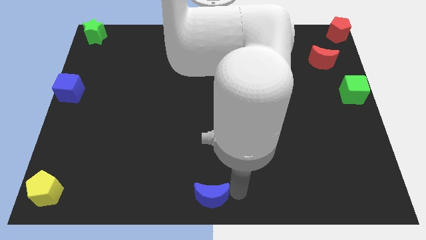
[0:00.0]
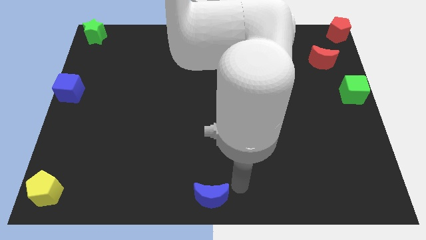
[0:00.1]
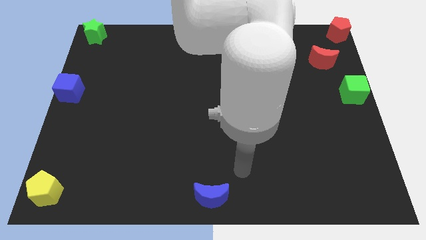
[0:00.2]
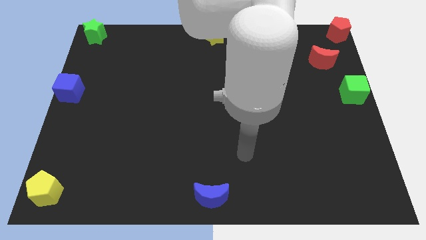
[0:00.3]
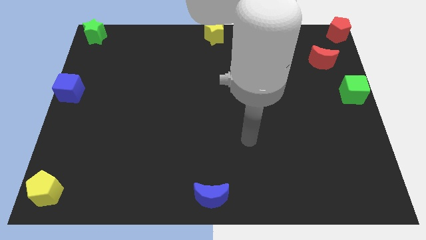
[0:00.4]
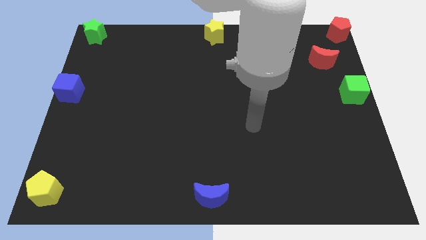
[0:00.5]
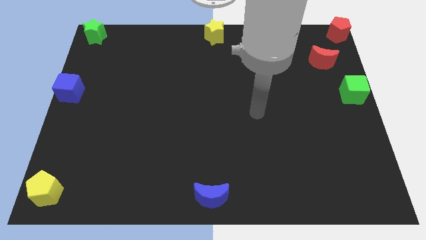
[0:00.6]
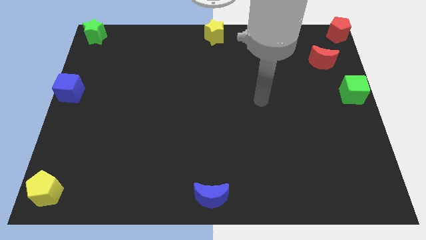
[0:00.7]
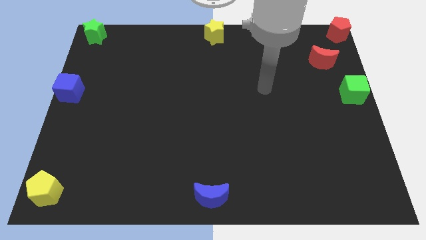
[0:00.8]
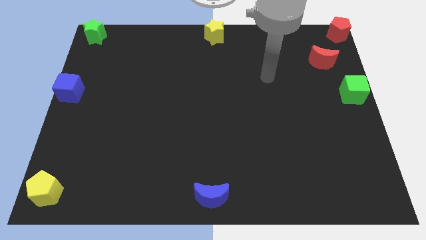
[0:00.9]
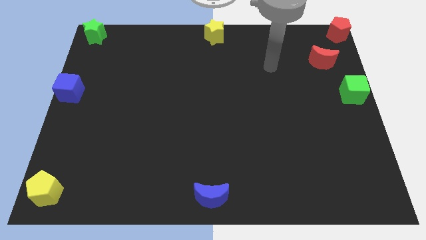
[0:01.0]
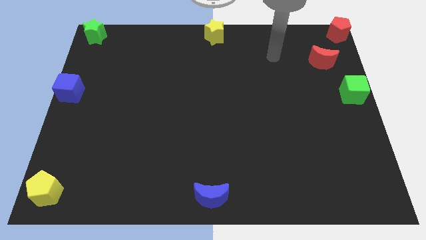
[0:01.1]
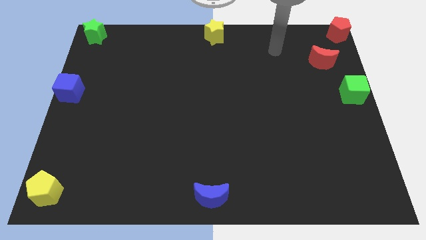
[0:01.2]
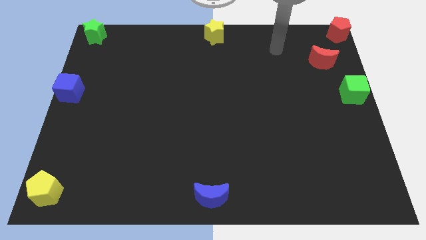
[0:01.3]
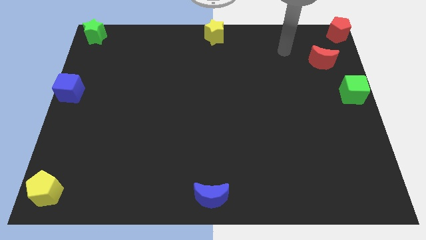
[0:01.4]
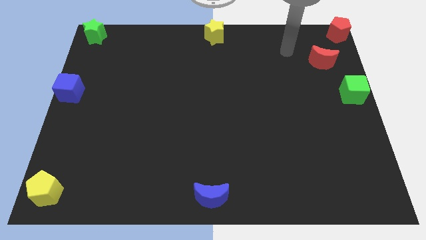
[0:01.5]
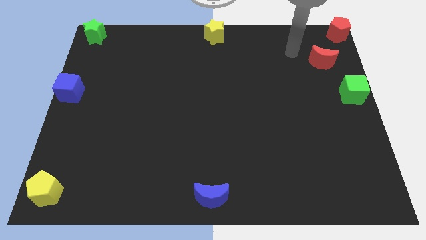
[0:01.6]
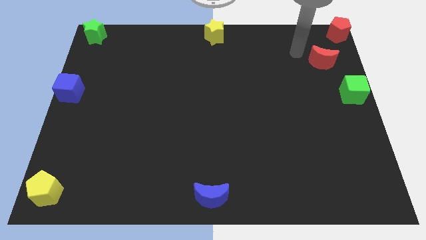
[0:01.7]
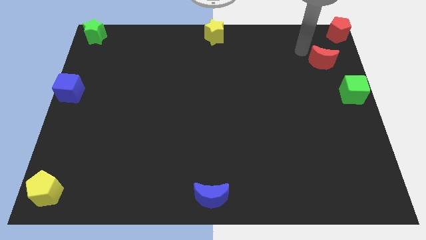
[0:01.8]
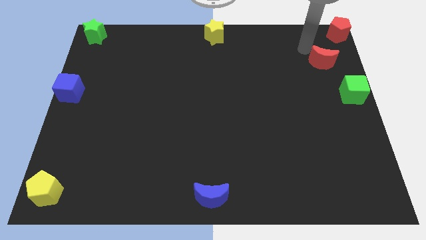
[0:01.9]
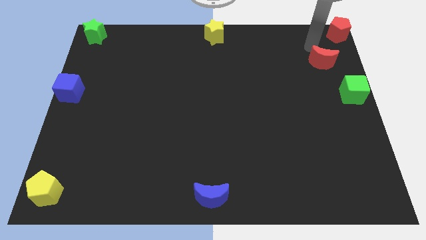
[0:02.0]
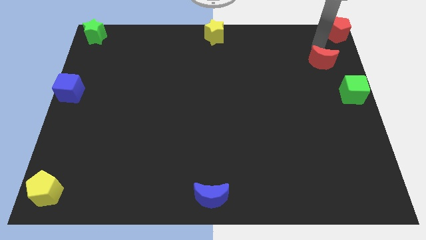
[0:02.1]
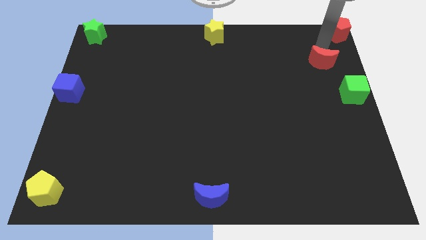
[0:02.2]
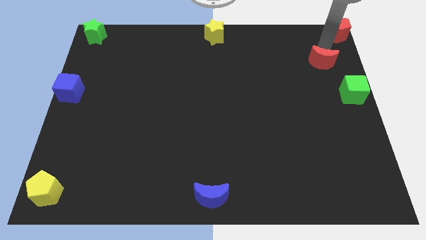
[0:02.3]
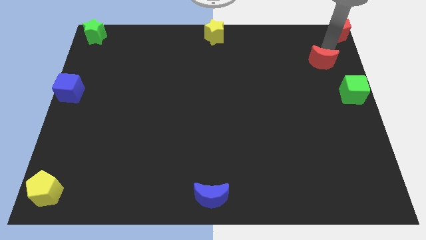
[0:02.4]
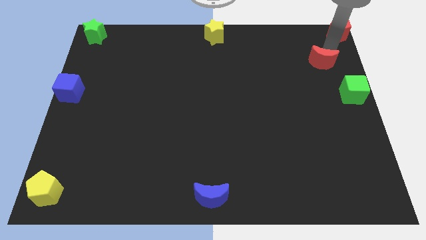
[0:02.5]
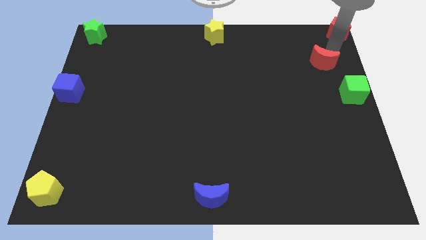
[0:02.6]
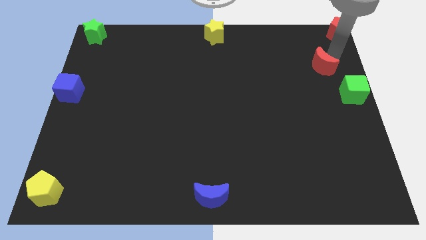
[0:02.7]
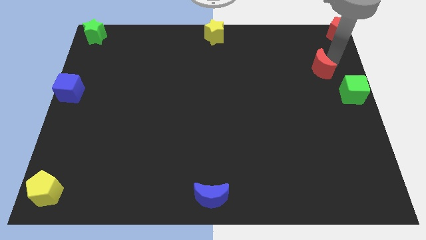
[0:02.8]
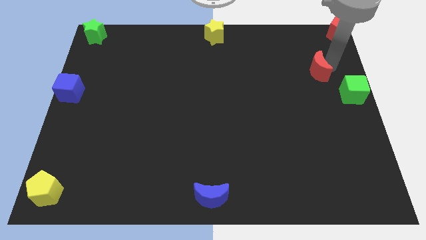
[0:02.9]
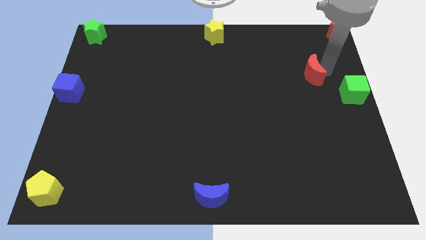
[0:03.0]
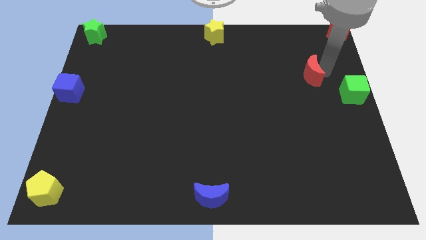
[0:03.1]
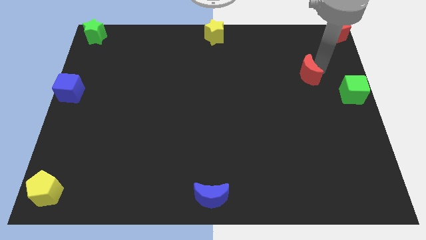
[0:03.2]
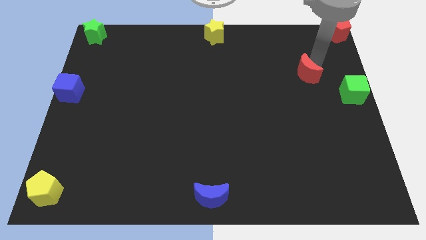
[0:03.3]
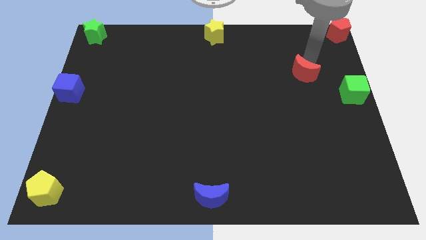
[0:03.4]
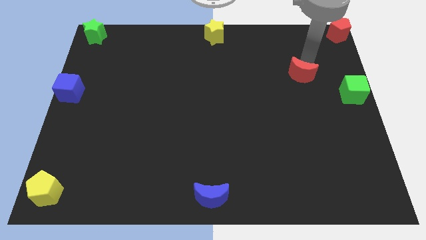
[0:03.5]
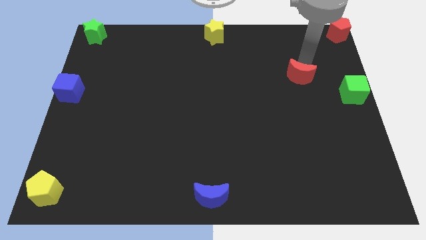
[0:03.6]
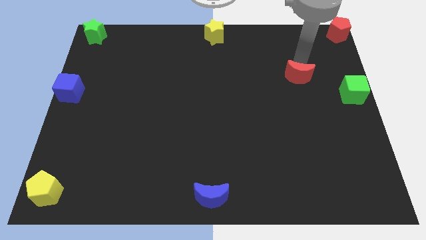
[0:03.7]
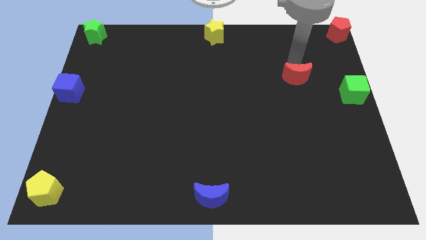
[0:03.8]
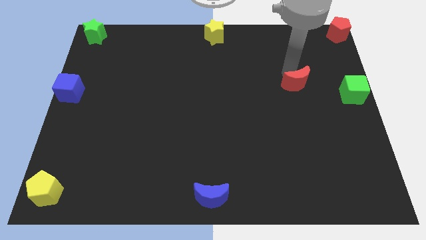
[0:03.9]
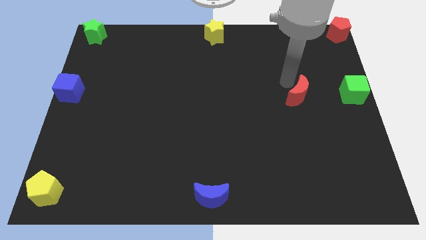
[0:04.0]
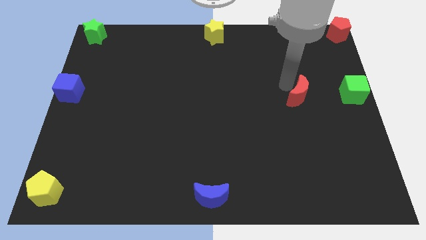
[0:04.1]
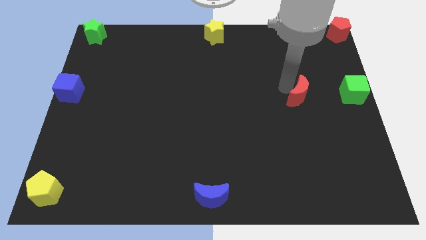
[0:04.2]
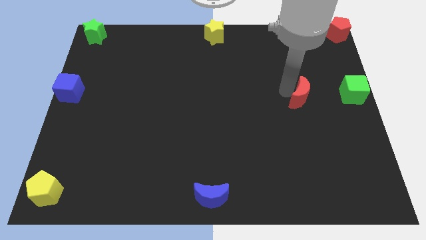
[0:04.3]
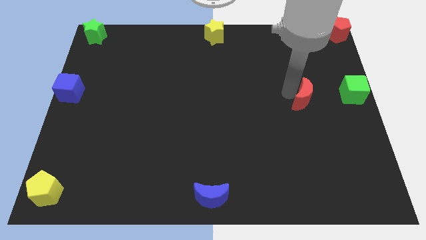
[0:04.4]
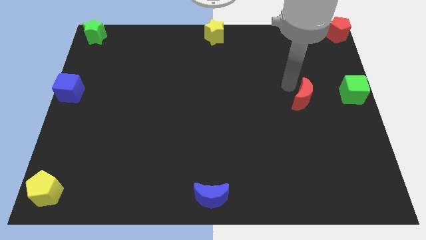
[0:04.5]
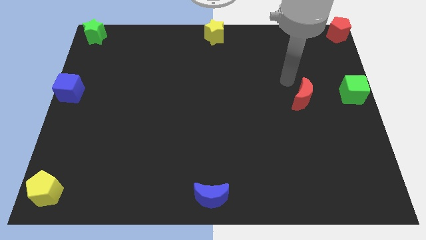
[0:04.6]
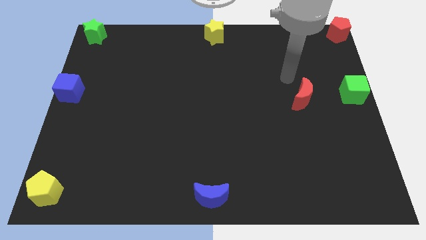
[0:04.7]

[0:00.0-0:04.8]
move the red moon horizontally to the left side of the green cube

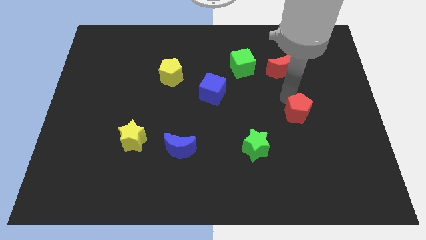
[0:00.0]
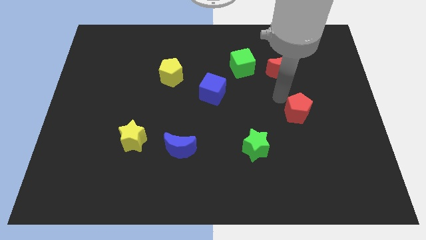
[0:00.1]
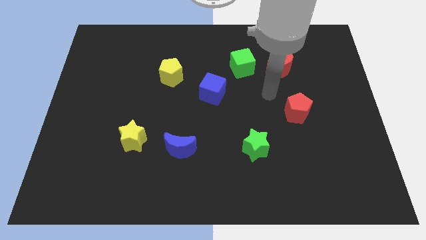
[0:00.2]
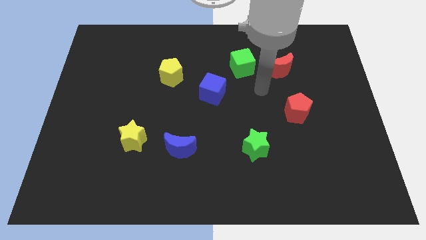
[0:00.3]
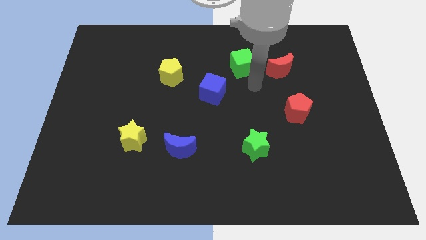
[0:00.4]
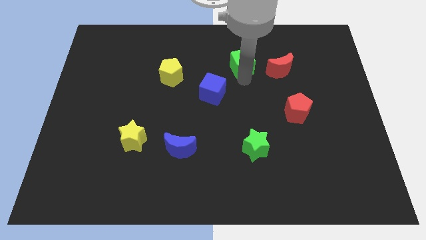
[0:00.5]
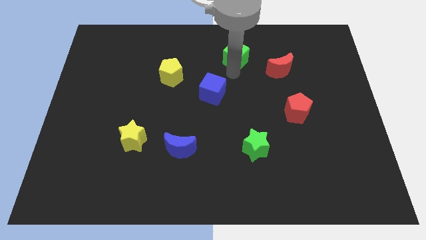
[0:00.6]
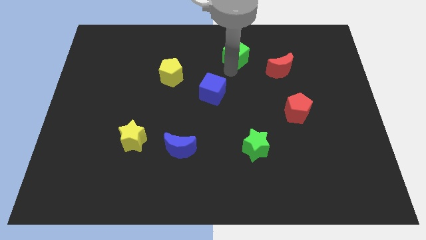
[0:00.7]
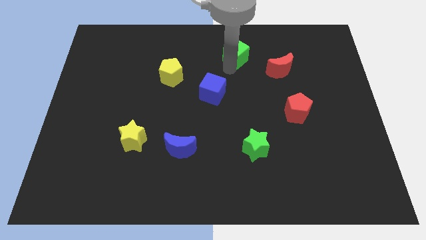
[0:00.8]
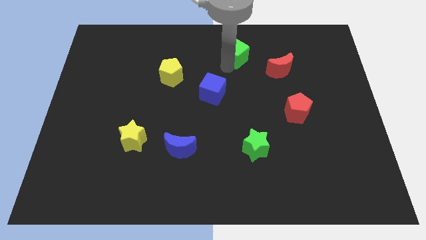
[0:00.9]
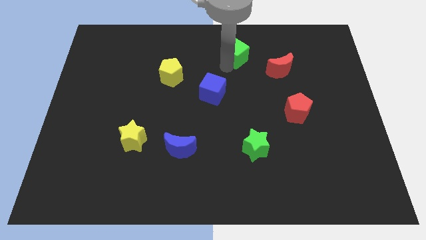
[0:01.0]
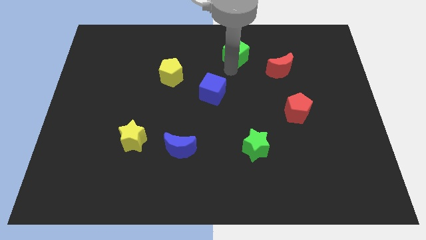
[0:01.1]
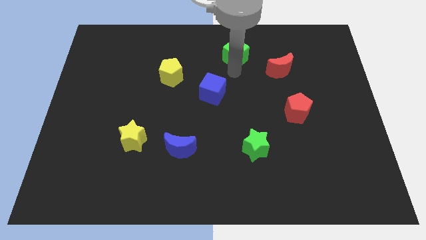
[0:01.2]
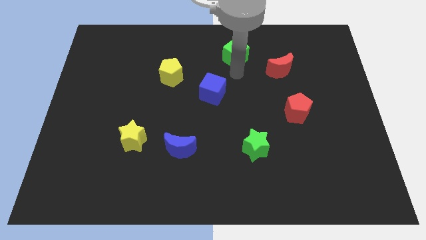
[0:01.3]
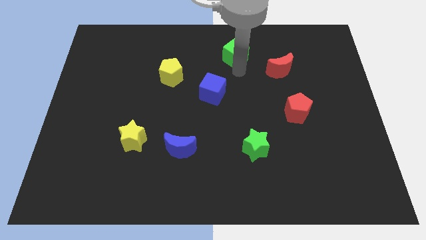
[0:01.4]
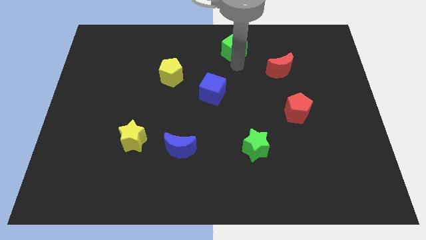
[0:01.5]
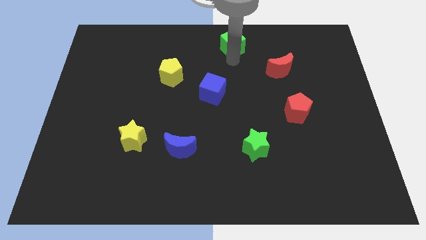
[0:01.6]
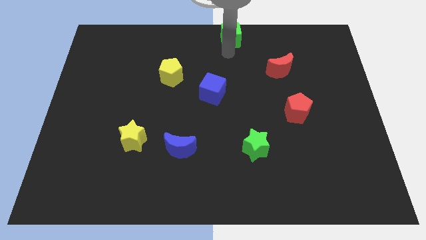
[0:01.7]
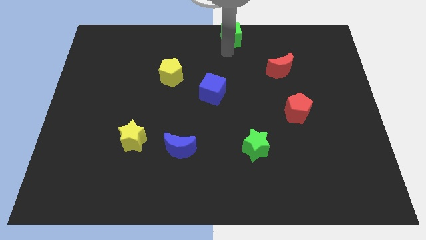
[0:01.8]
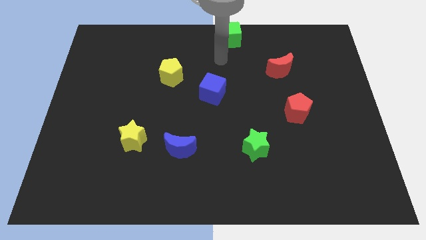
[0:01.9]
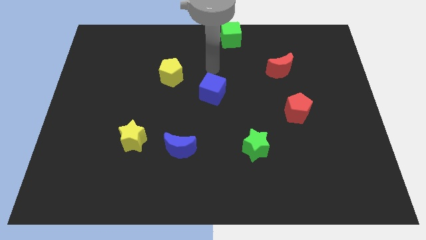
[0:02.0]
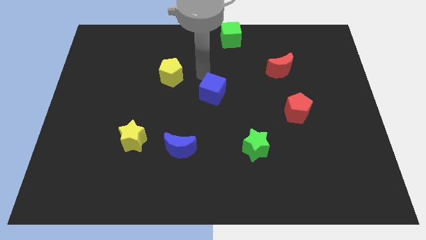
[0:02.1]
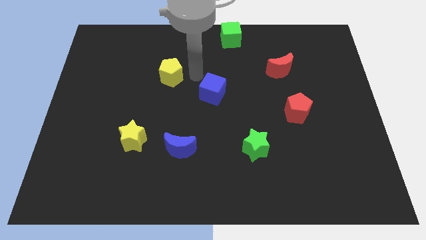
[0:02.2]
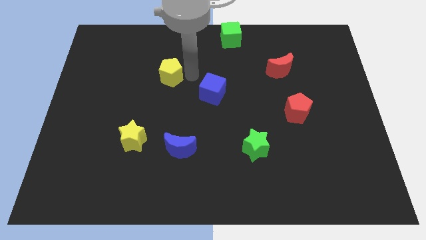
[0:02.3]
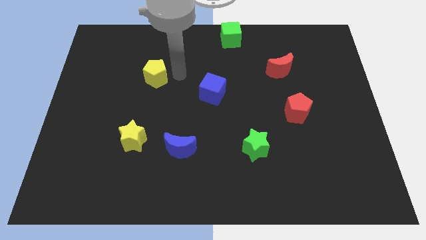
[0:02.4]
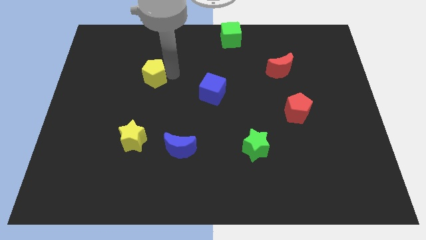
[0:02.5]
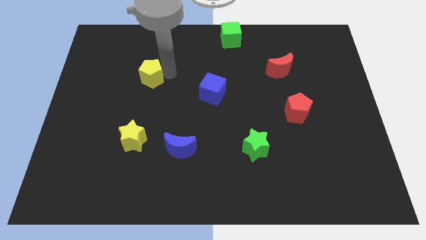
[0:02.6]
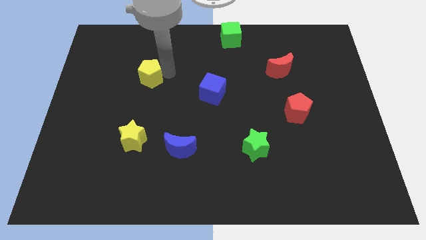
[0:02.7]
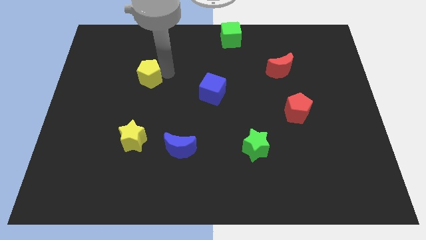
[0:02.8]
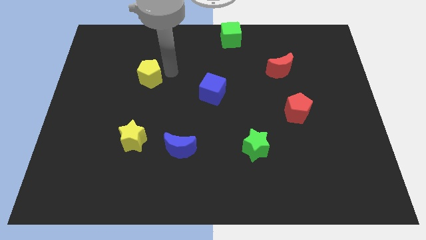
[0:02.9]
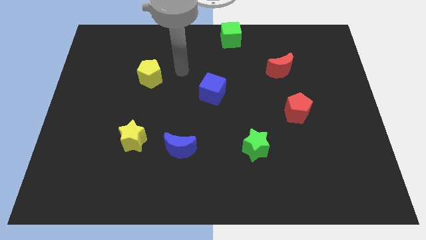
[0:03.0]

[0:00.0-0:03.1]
push green cube to the top center of the board

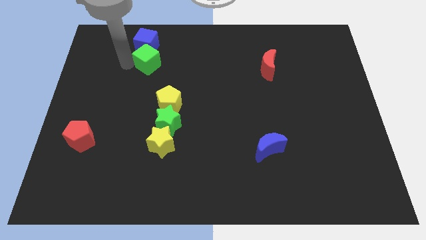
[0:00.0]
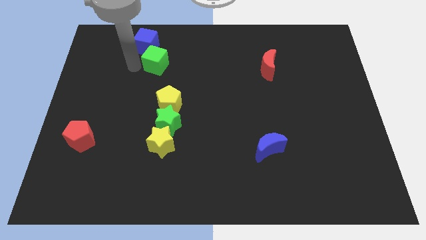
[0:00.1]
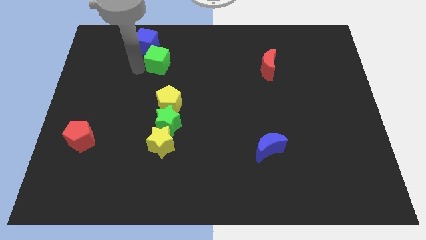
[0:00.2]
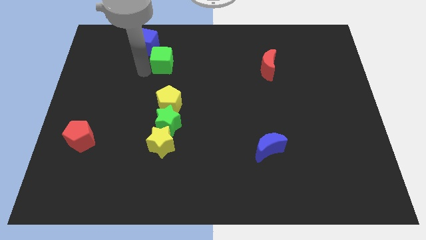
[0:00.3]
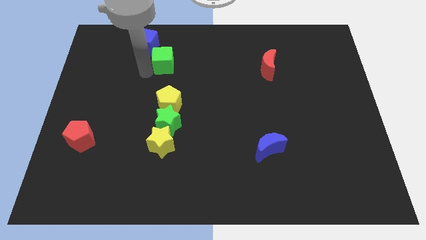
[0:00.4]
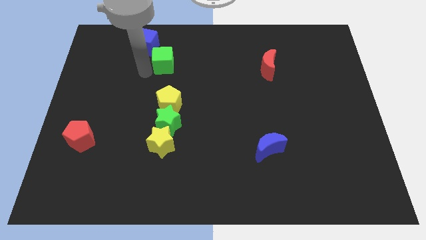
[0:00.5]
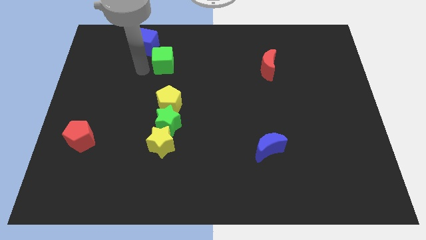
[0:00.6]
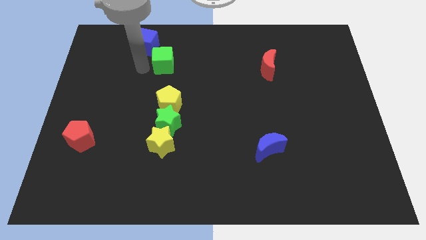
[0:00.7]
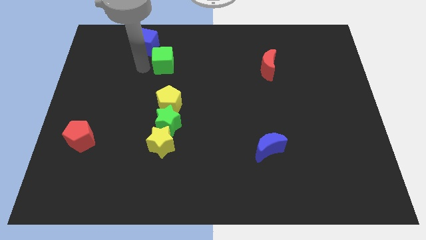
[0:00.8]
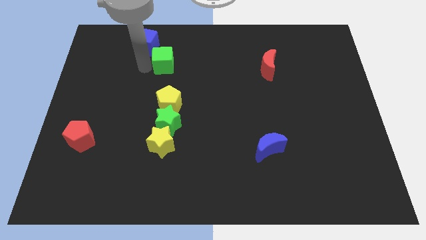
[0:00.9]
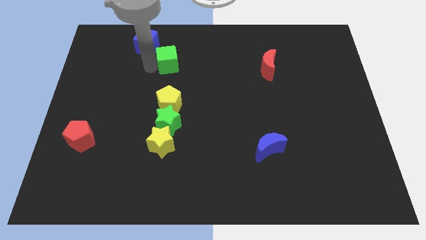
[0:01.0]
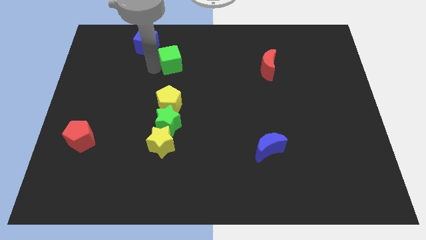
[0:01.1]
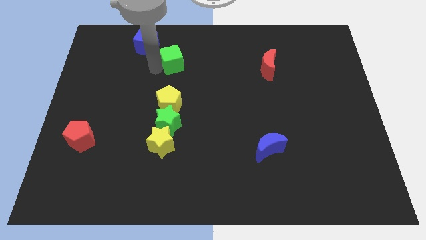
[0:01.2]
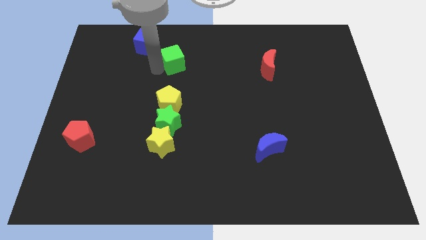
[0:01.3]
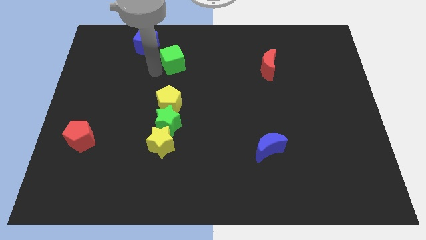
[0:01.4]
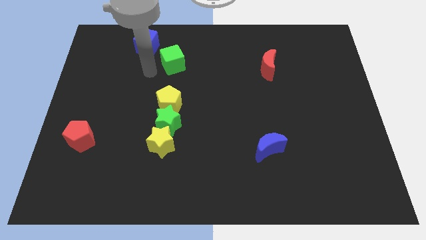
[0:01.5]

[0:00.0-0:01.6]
push green parallel to the top of the yellow pentagon
